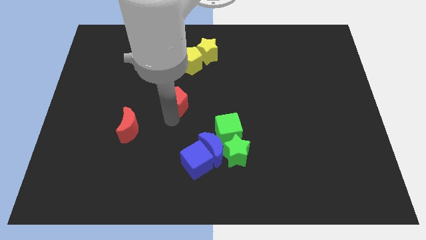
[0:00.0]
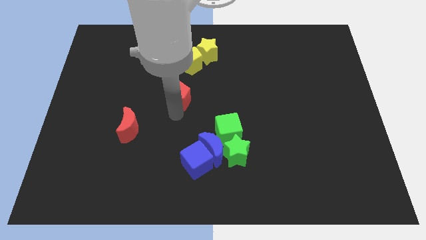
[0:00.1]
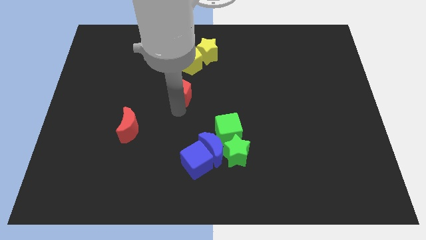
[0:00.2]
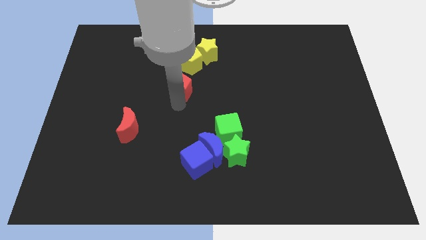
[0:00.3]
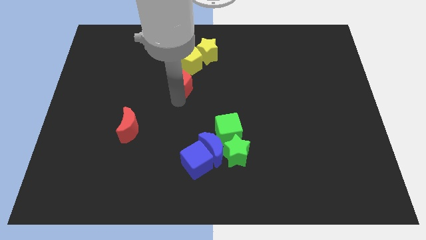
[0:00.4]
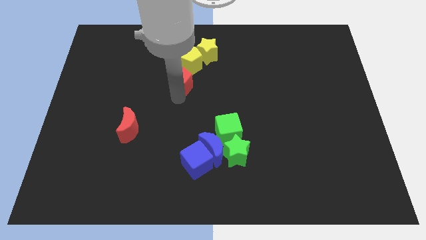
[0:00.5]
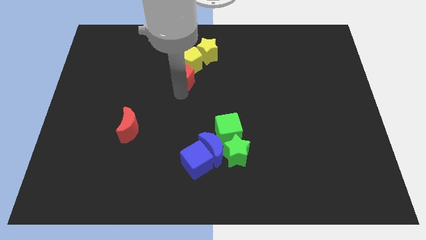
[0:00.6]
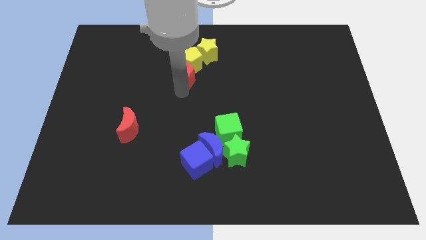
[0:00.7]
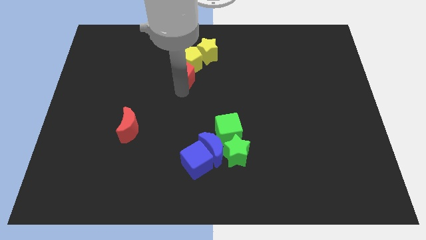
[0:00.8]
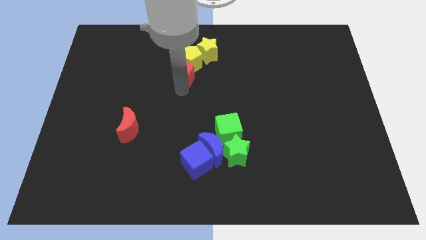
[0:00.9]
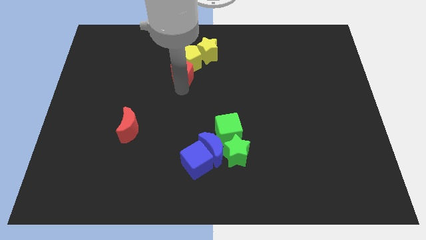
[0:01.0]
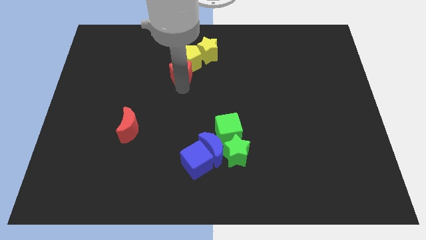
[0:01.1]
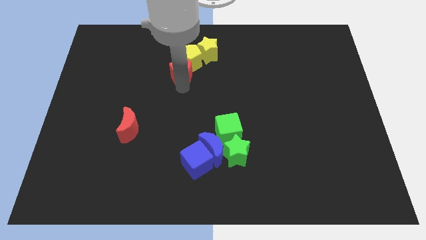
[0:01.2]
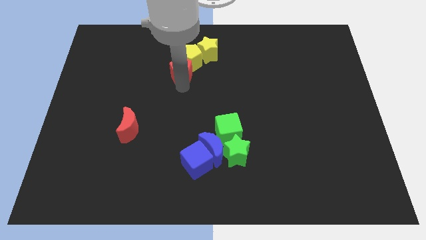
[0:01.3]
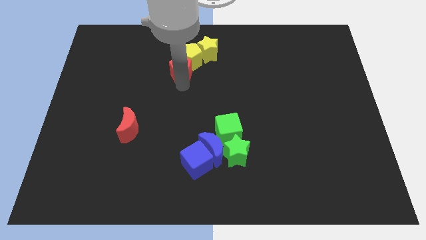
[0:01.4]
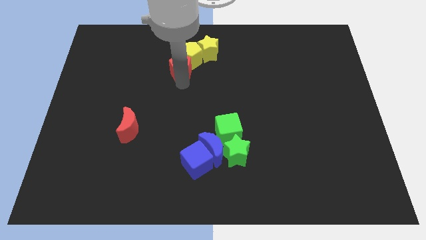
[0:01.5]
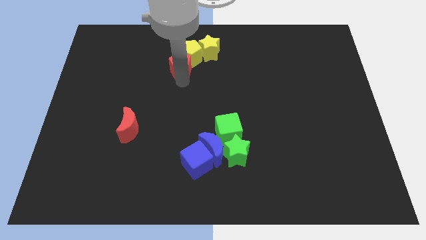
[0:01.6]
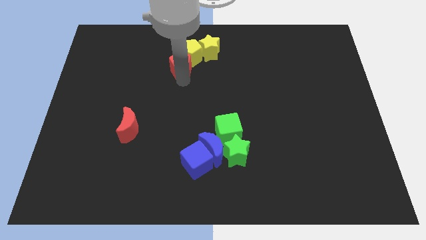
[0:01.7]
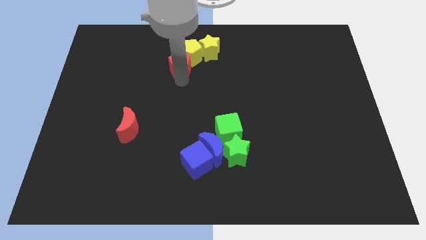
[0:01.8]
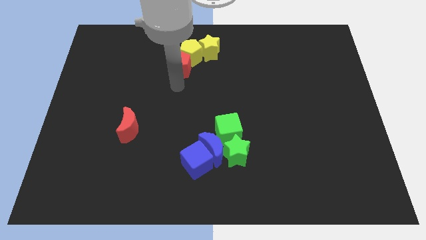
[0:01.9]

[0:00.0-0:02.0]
push the yellow star yellow pentagon with the red pentagon towards the center of the board

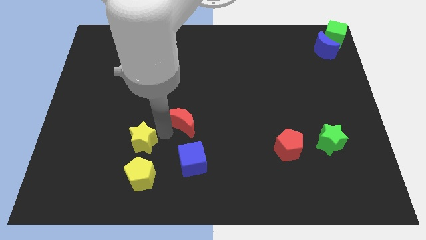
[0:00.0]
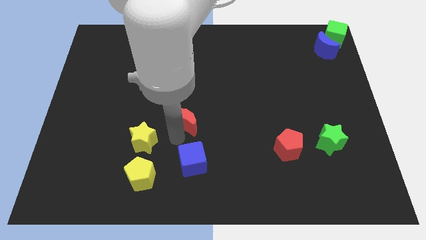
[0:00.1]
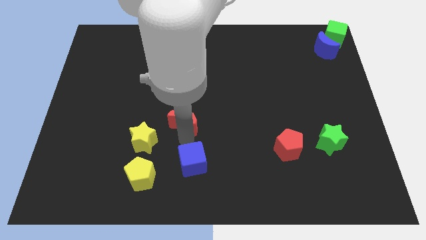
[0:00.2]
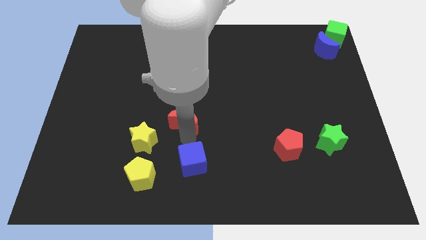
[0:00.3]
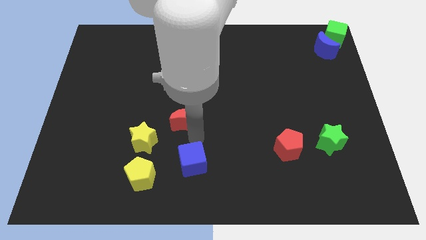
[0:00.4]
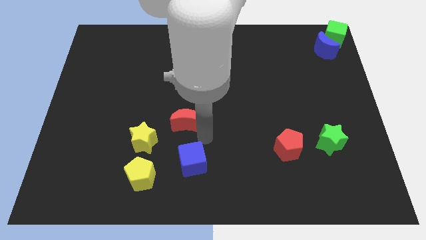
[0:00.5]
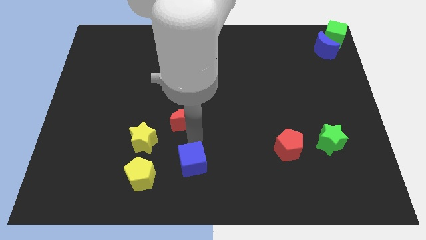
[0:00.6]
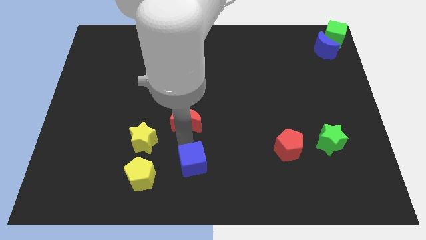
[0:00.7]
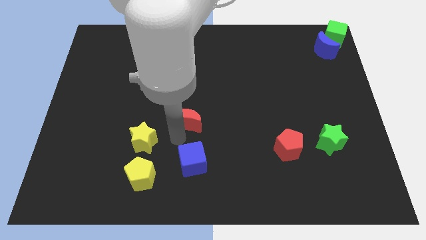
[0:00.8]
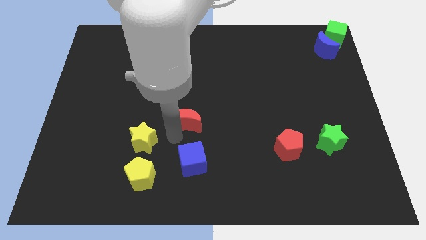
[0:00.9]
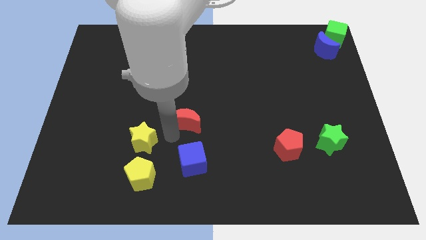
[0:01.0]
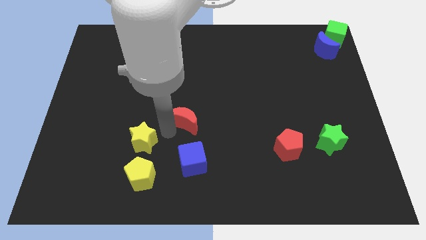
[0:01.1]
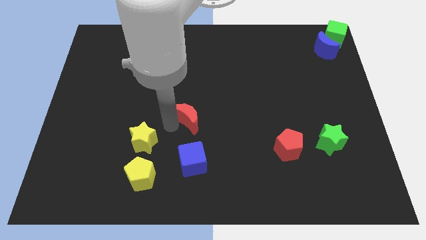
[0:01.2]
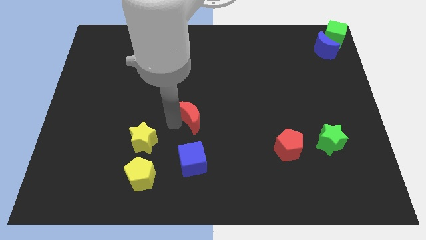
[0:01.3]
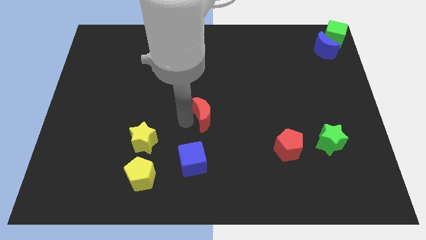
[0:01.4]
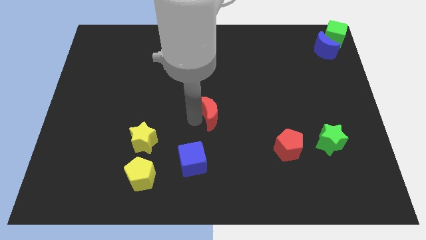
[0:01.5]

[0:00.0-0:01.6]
put the red moon above the blue cube

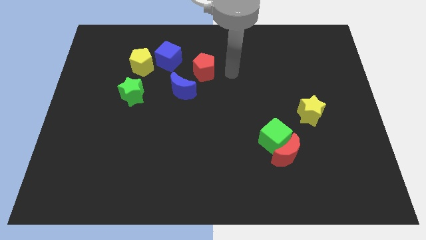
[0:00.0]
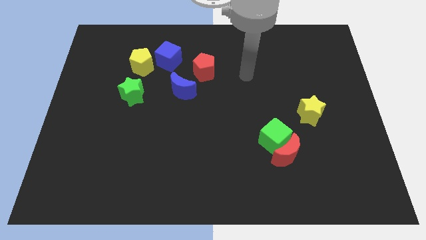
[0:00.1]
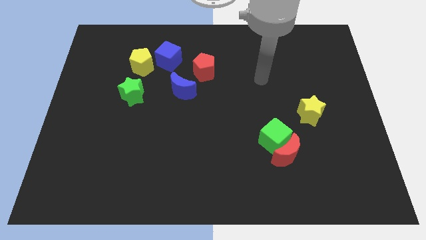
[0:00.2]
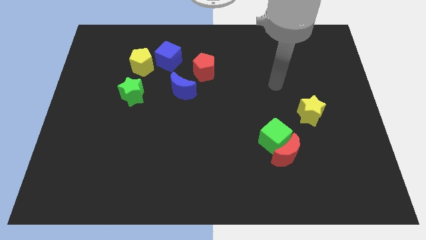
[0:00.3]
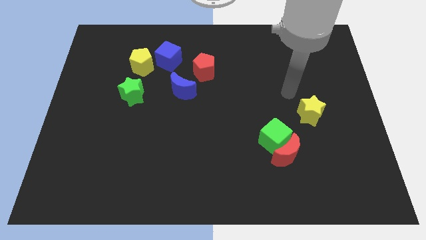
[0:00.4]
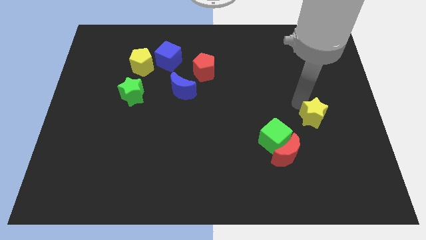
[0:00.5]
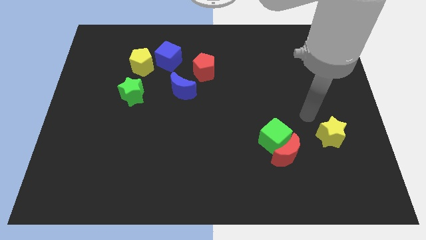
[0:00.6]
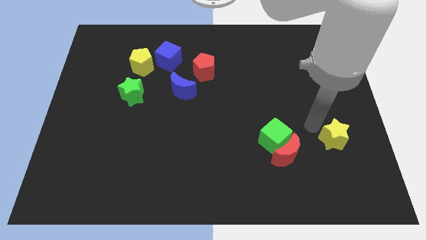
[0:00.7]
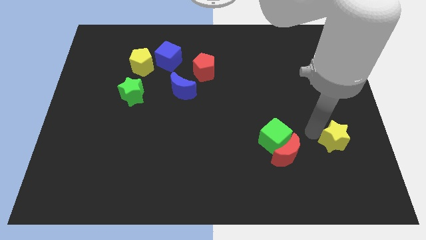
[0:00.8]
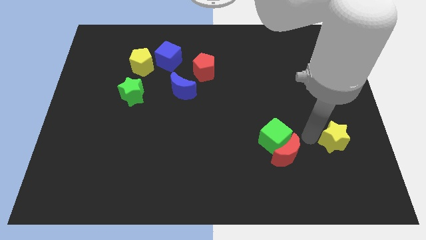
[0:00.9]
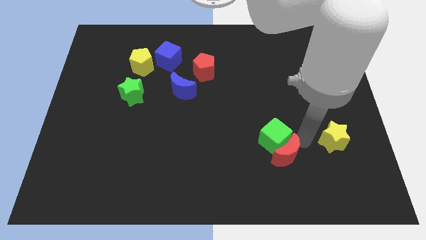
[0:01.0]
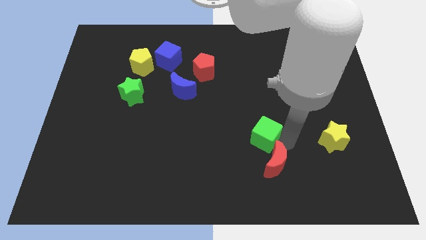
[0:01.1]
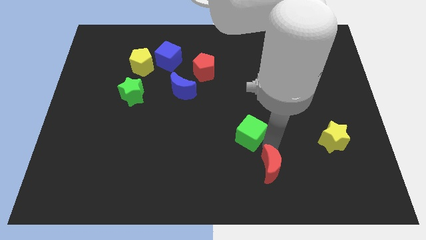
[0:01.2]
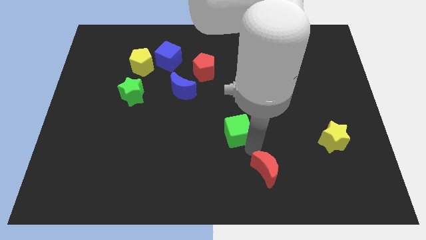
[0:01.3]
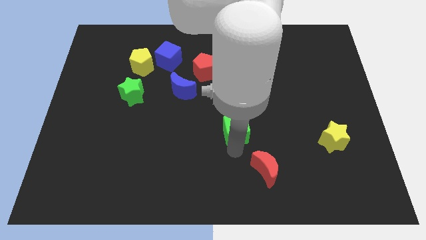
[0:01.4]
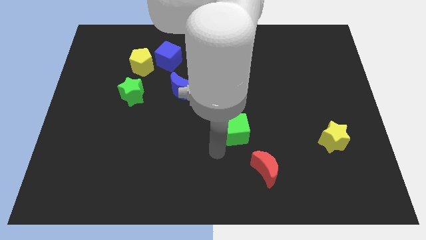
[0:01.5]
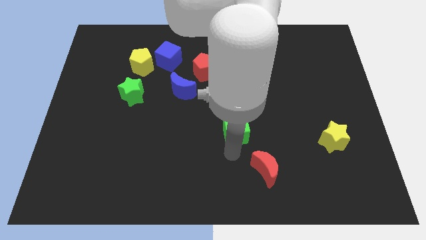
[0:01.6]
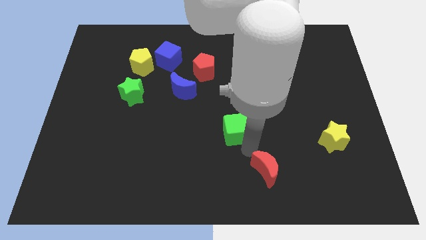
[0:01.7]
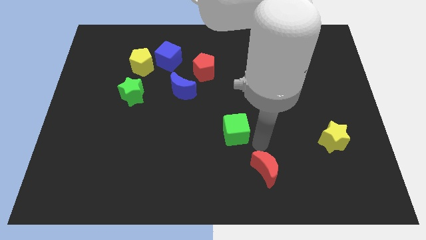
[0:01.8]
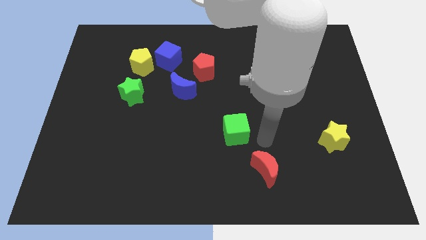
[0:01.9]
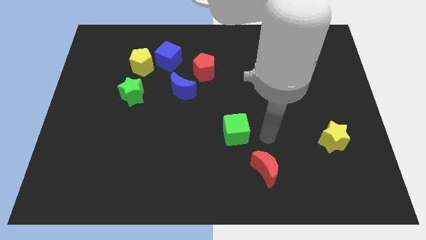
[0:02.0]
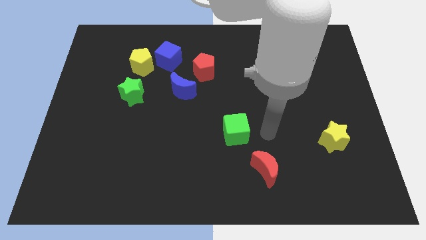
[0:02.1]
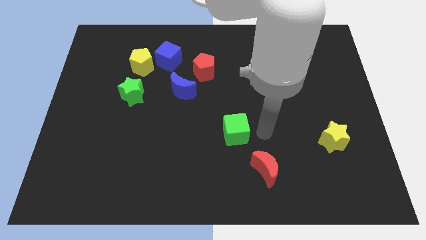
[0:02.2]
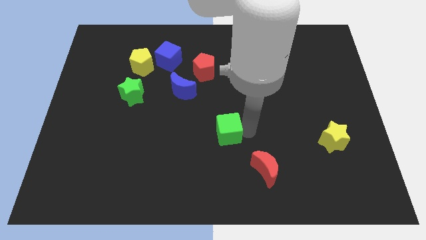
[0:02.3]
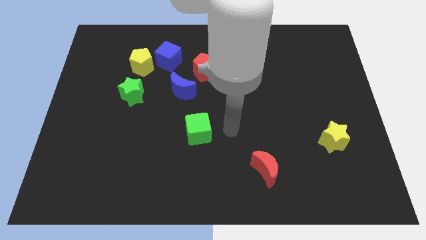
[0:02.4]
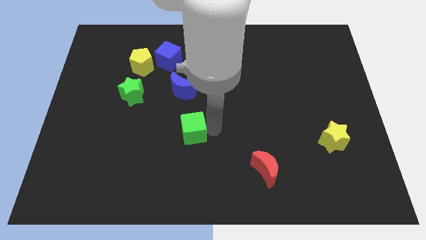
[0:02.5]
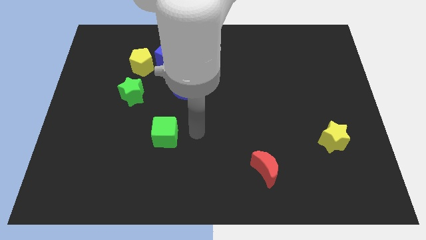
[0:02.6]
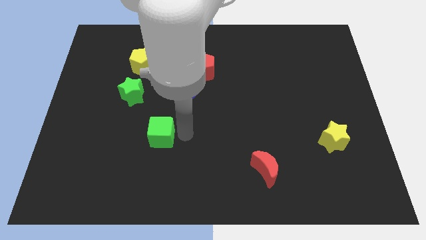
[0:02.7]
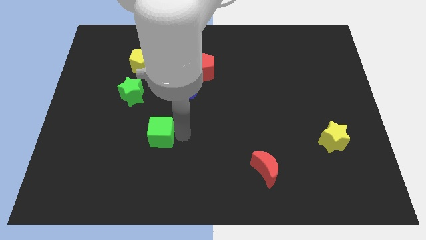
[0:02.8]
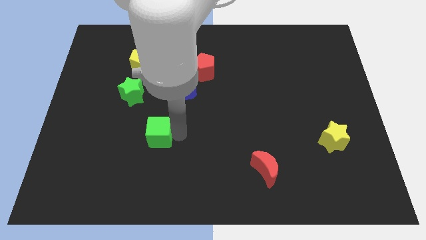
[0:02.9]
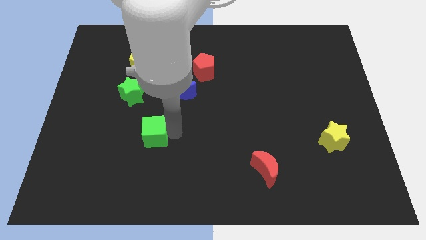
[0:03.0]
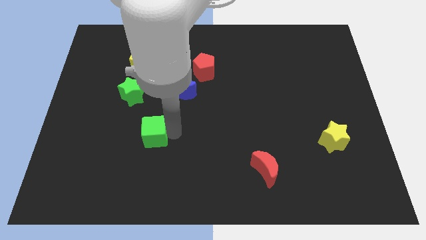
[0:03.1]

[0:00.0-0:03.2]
separate the yellow star green cube and the red crescent

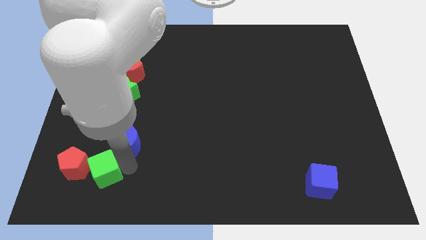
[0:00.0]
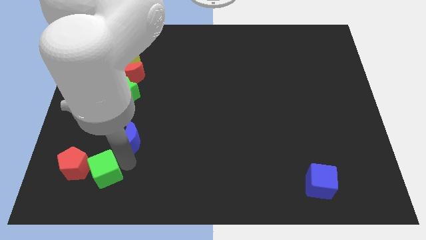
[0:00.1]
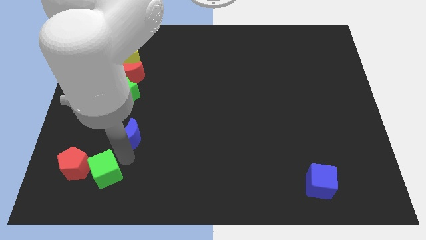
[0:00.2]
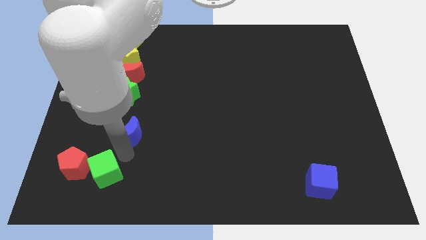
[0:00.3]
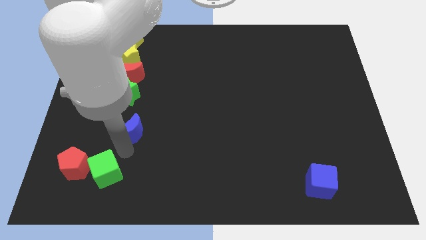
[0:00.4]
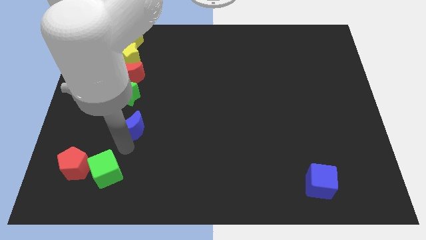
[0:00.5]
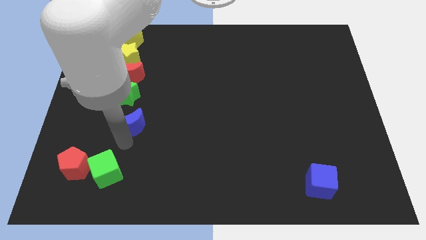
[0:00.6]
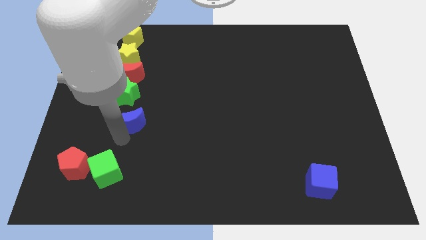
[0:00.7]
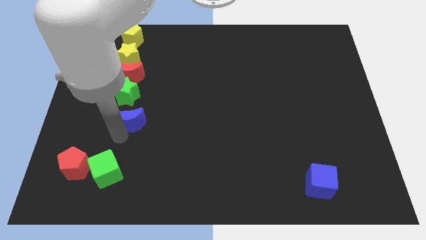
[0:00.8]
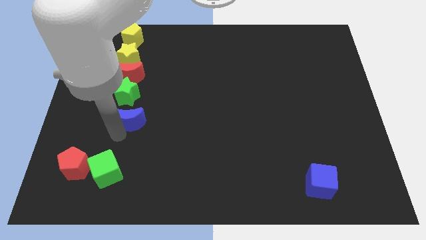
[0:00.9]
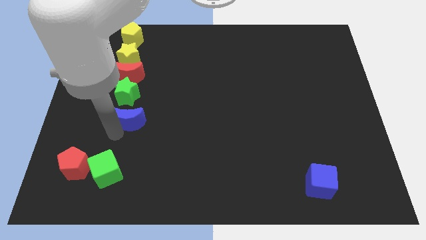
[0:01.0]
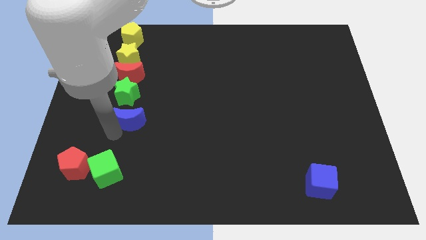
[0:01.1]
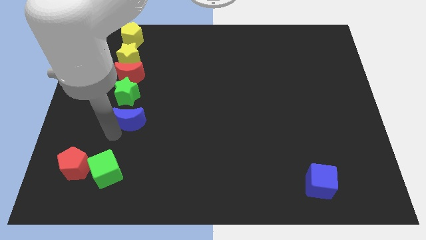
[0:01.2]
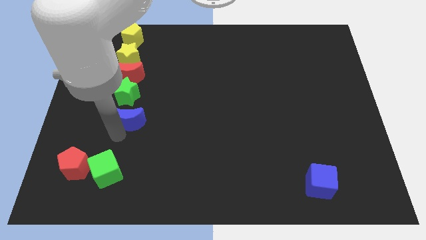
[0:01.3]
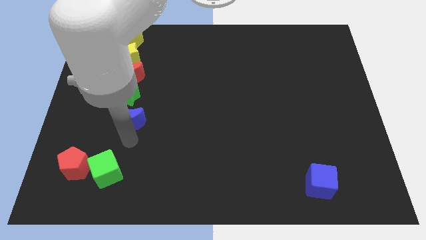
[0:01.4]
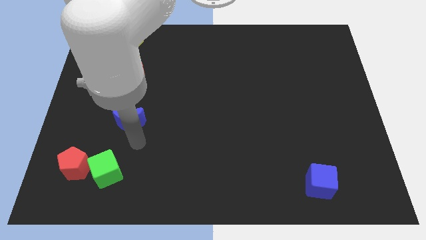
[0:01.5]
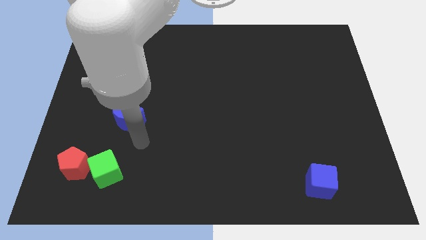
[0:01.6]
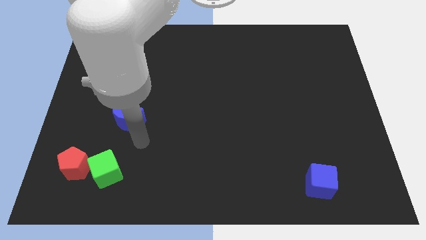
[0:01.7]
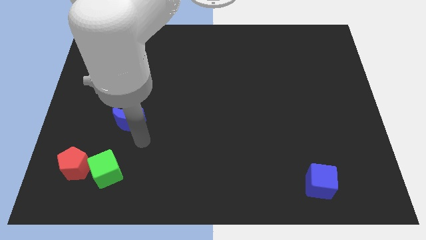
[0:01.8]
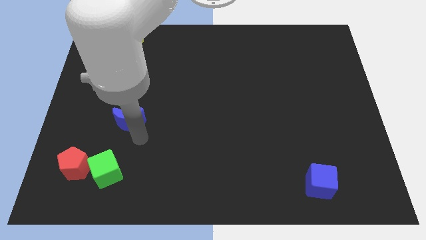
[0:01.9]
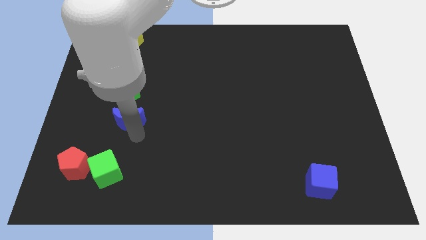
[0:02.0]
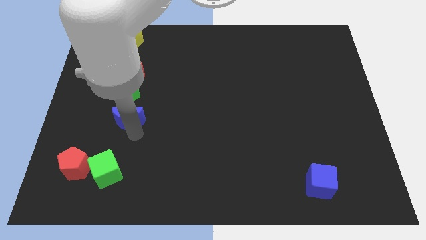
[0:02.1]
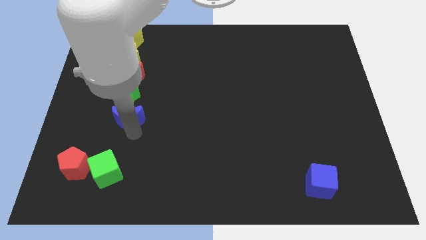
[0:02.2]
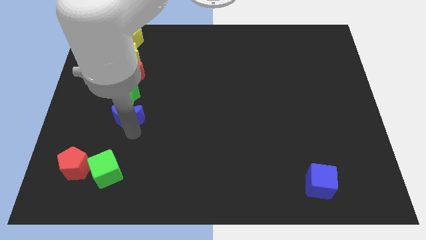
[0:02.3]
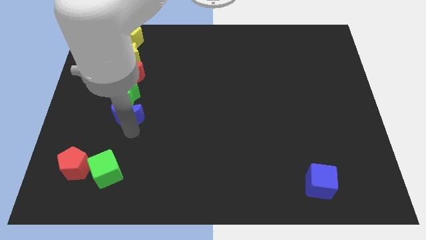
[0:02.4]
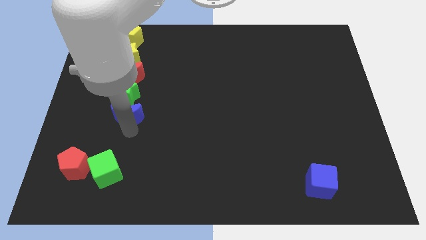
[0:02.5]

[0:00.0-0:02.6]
push the blue moon towards the green star
